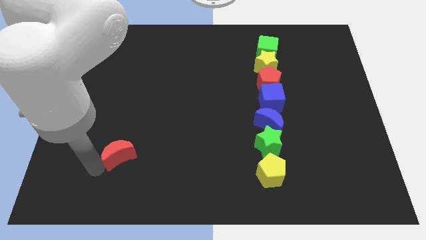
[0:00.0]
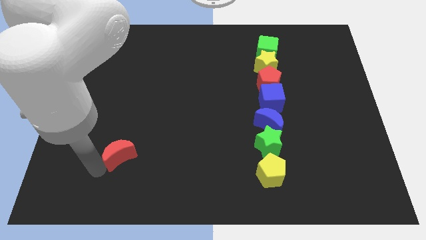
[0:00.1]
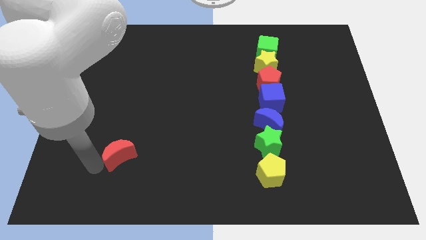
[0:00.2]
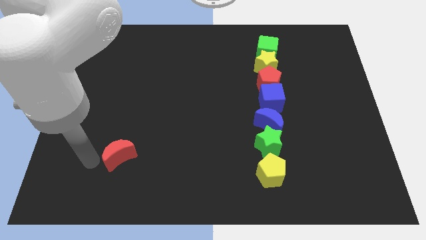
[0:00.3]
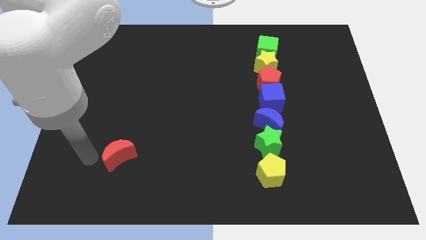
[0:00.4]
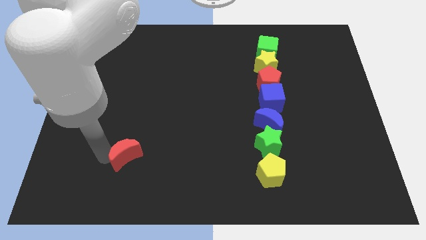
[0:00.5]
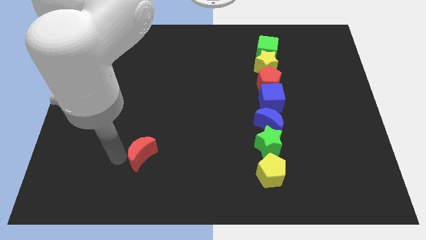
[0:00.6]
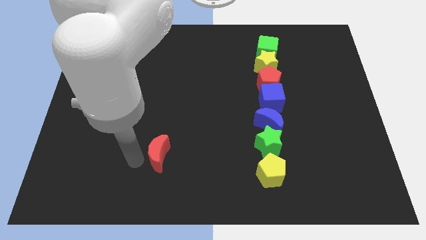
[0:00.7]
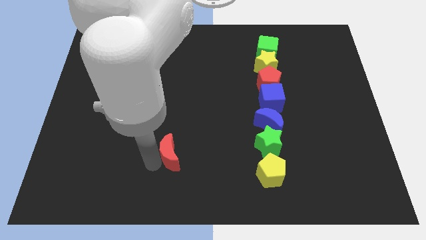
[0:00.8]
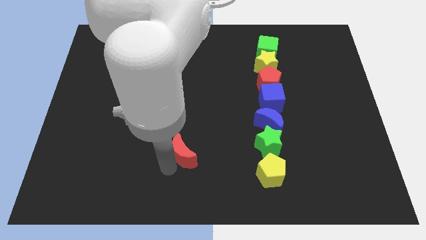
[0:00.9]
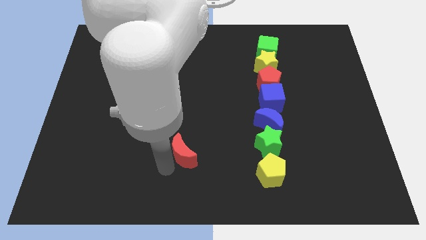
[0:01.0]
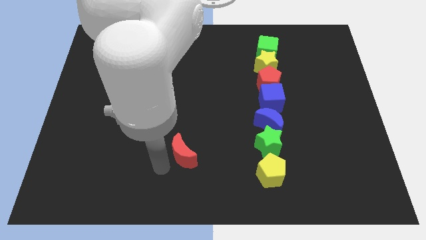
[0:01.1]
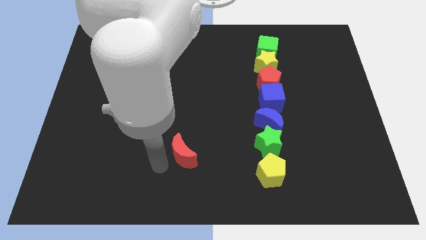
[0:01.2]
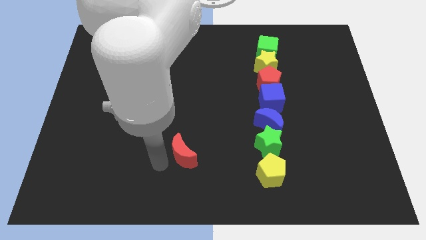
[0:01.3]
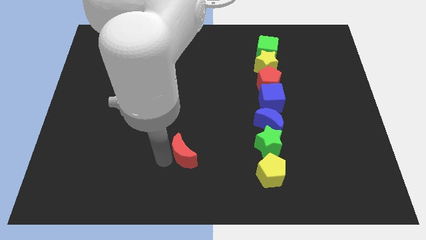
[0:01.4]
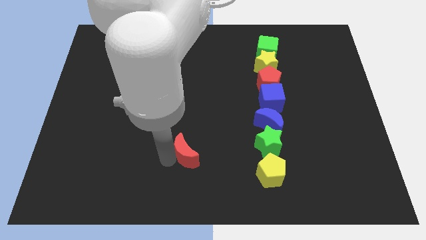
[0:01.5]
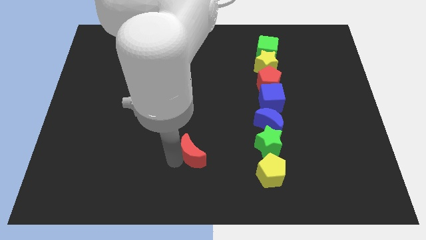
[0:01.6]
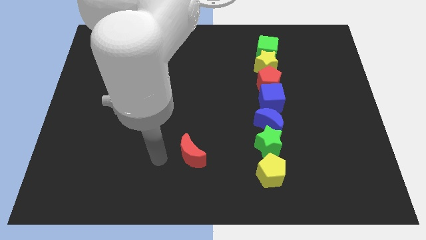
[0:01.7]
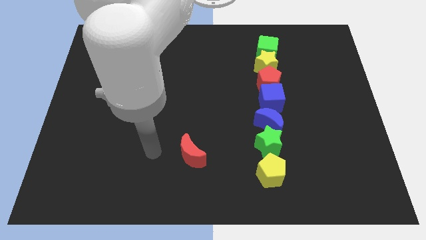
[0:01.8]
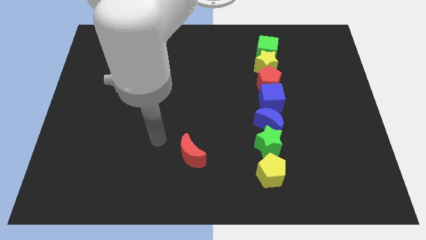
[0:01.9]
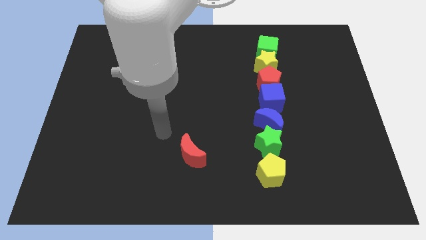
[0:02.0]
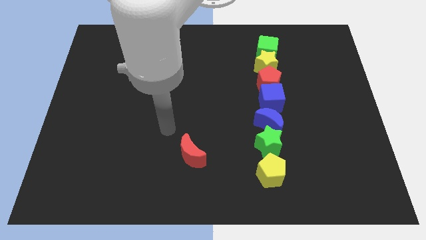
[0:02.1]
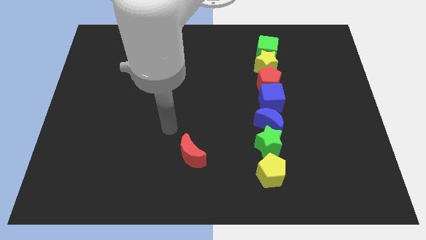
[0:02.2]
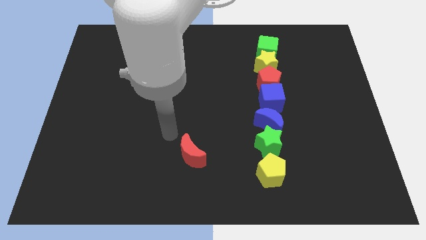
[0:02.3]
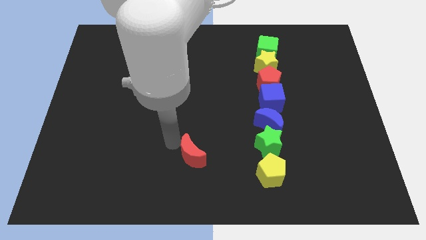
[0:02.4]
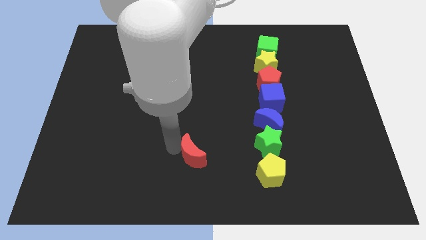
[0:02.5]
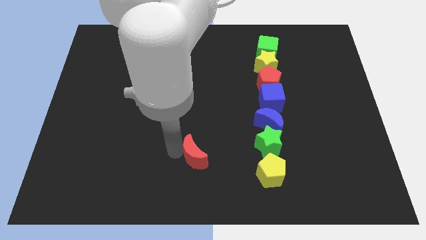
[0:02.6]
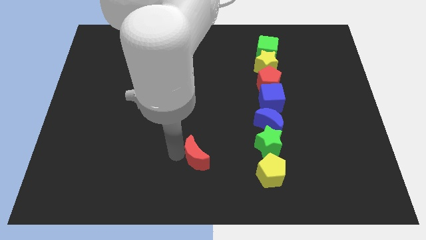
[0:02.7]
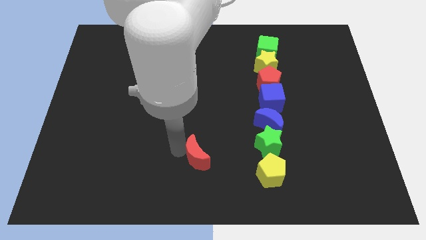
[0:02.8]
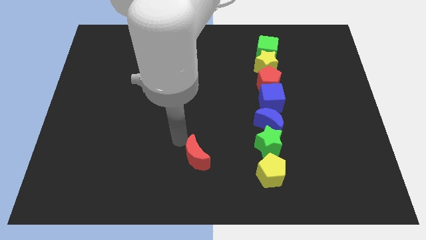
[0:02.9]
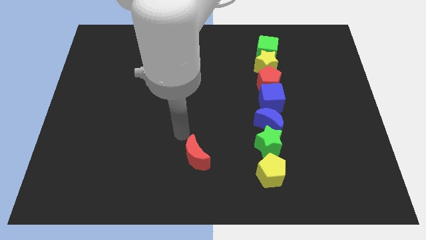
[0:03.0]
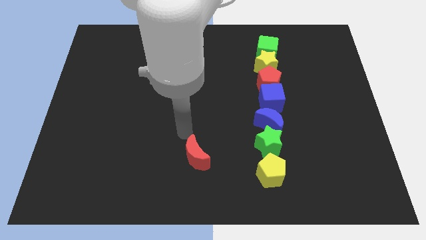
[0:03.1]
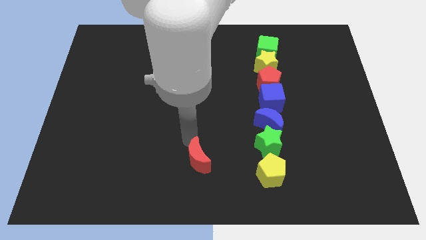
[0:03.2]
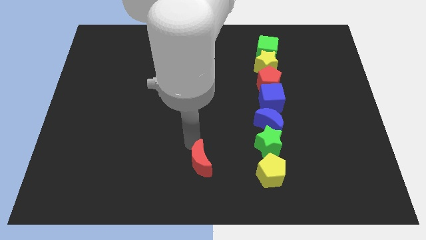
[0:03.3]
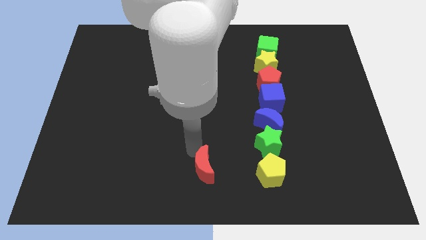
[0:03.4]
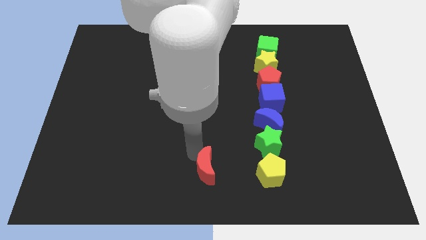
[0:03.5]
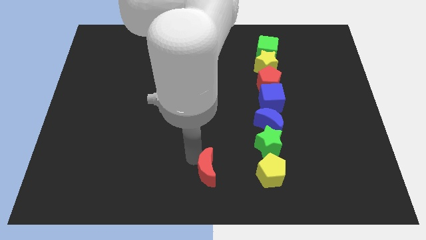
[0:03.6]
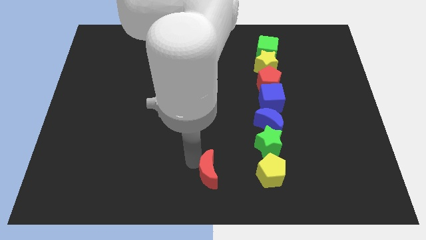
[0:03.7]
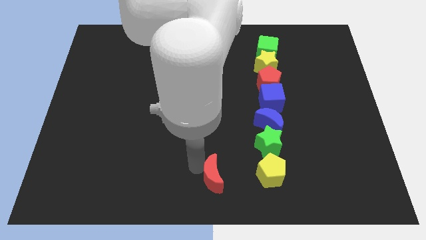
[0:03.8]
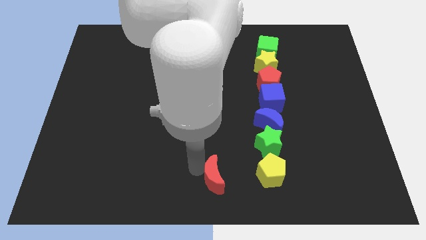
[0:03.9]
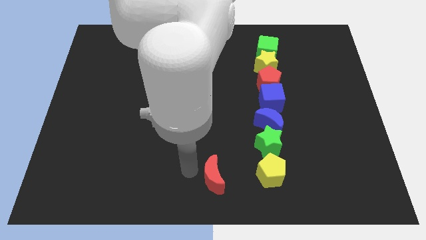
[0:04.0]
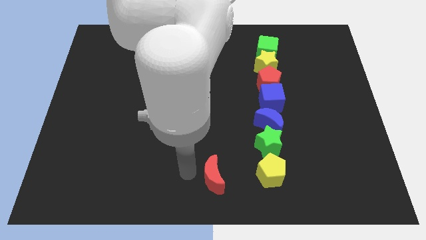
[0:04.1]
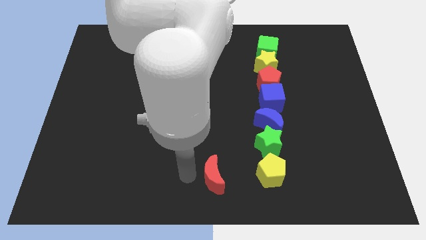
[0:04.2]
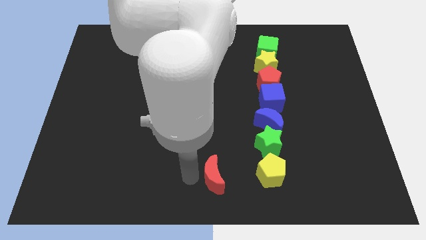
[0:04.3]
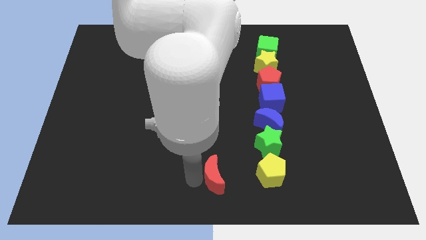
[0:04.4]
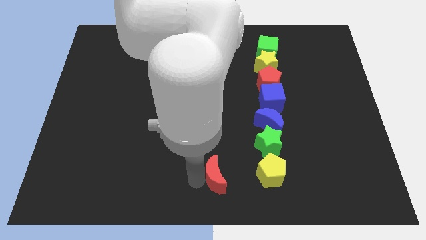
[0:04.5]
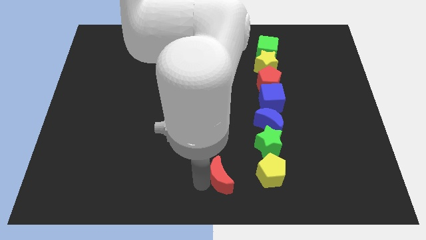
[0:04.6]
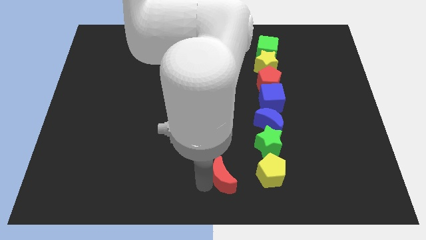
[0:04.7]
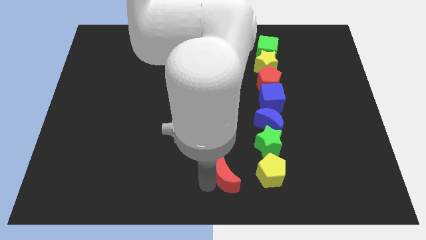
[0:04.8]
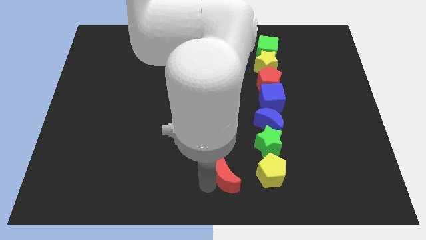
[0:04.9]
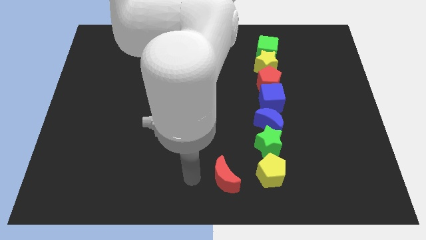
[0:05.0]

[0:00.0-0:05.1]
push the red crescent to the left of the yellow pentagon

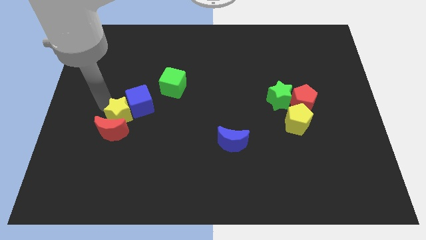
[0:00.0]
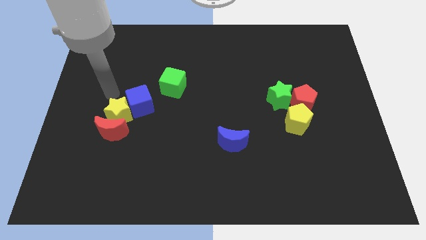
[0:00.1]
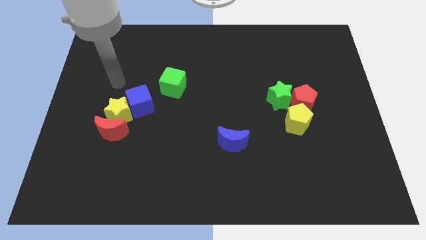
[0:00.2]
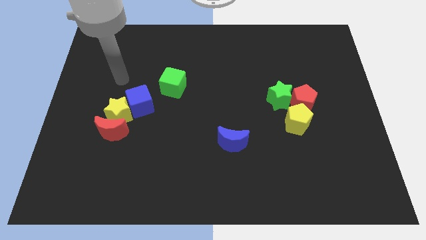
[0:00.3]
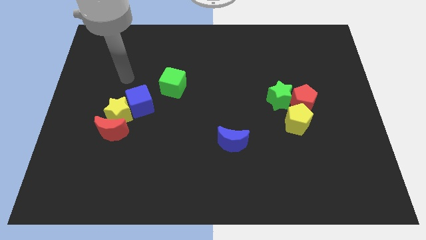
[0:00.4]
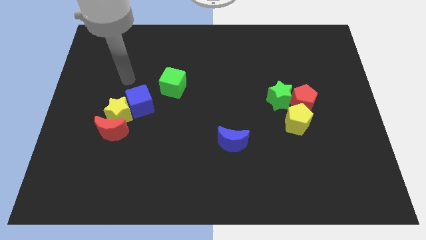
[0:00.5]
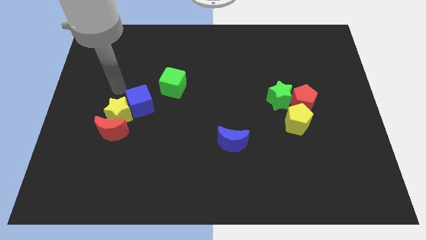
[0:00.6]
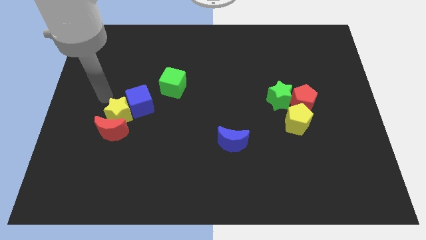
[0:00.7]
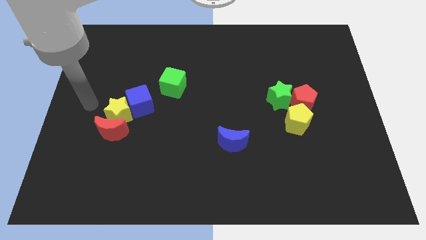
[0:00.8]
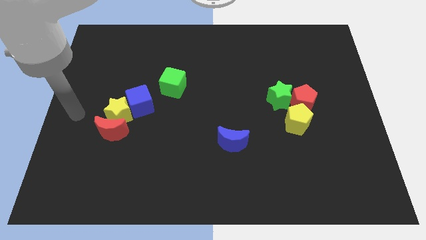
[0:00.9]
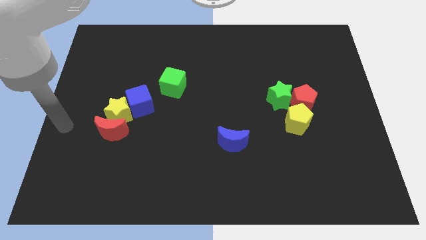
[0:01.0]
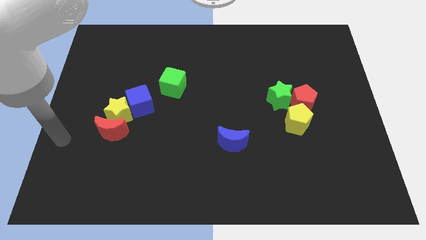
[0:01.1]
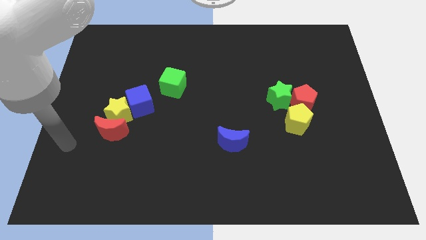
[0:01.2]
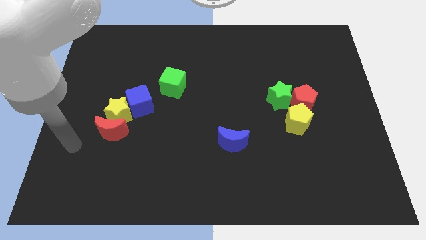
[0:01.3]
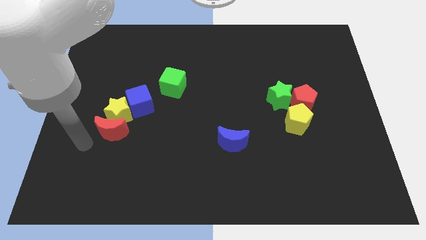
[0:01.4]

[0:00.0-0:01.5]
move the arm towards the bottom left of the red crescent

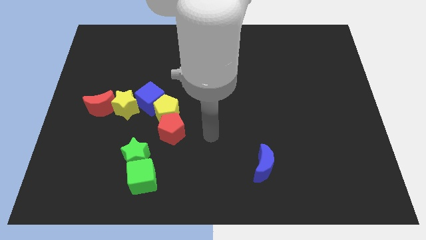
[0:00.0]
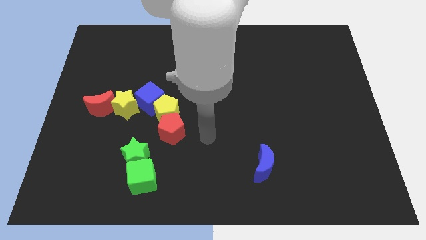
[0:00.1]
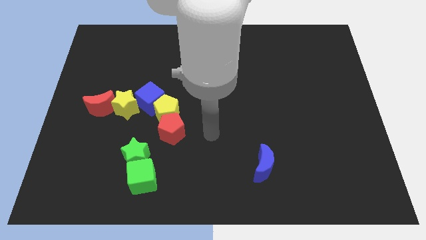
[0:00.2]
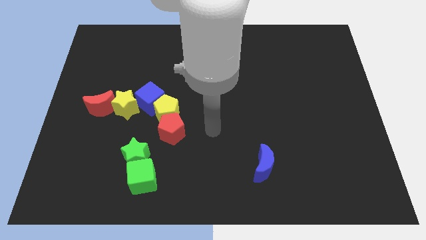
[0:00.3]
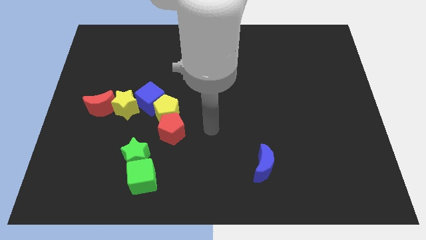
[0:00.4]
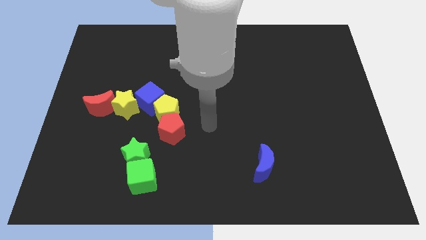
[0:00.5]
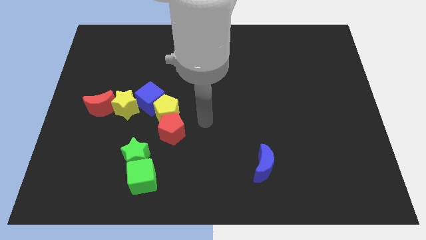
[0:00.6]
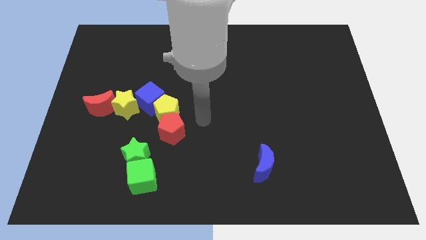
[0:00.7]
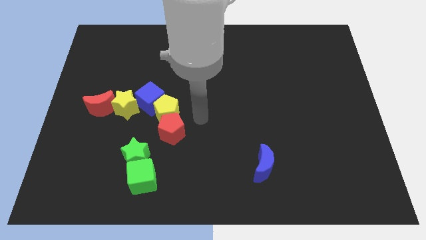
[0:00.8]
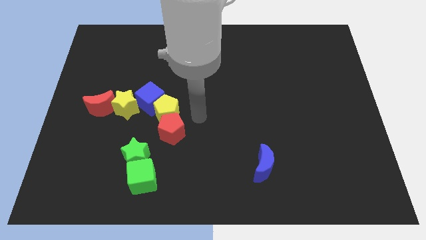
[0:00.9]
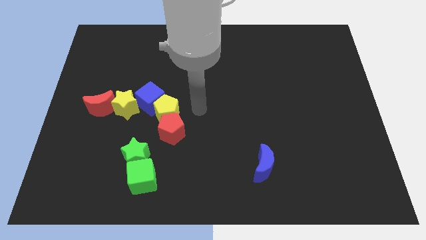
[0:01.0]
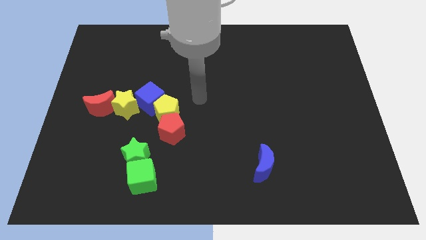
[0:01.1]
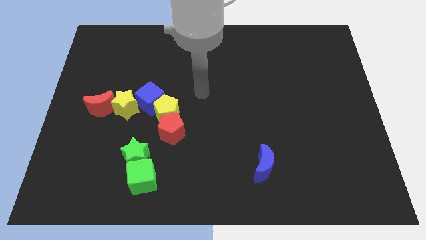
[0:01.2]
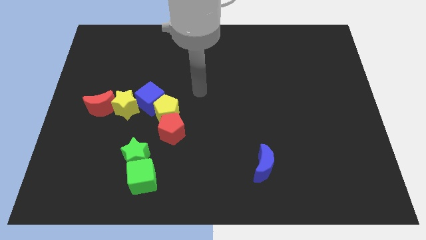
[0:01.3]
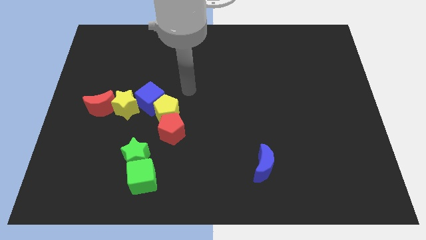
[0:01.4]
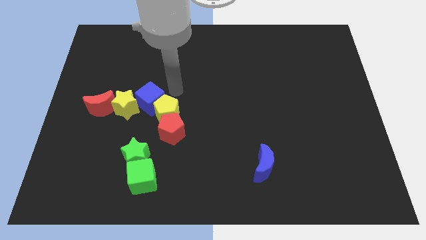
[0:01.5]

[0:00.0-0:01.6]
move the arm to the left of the blue cube
